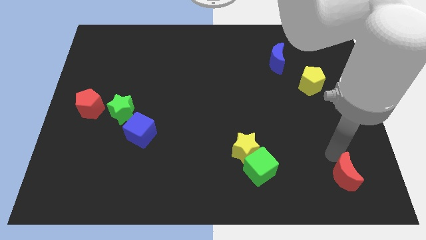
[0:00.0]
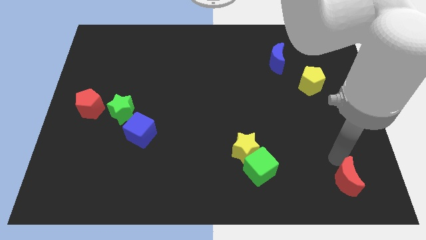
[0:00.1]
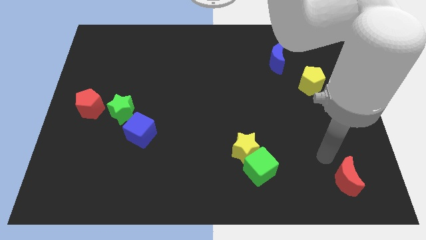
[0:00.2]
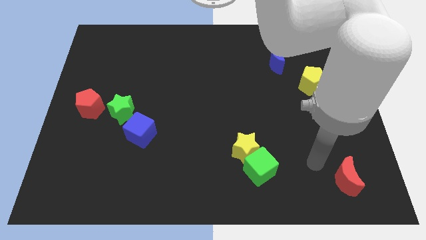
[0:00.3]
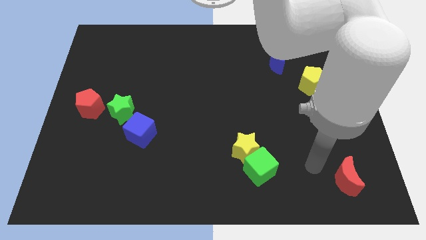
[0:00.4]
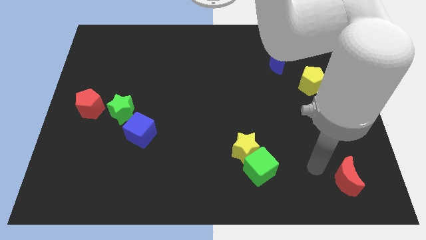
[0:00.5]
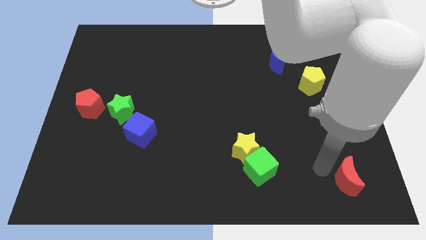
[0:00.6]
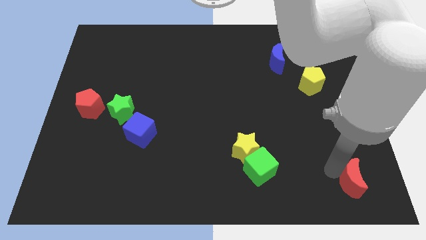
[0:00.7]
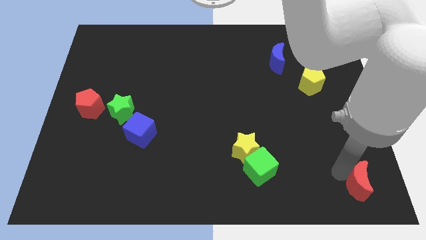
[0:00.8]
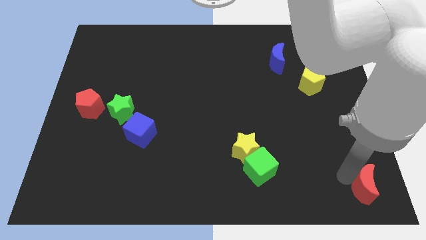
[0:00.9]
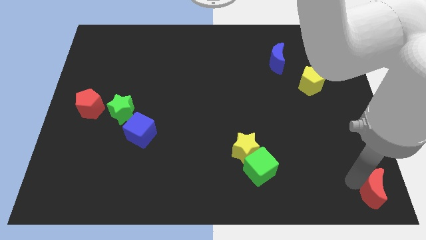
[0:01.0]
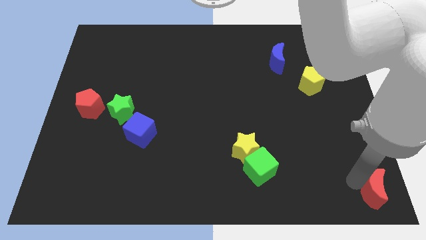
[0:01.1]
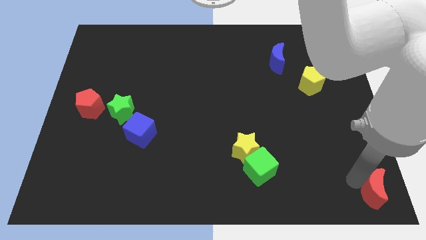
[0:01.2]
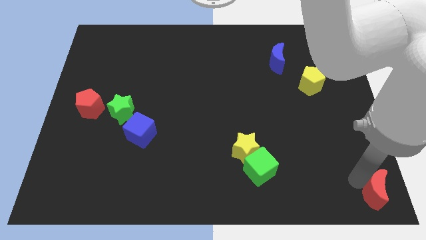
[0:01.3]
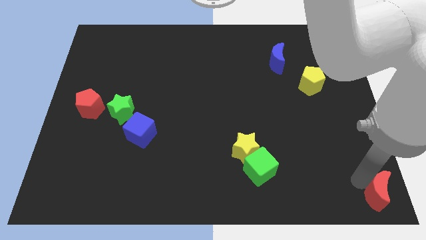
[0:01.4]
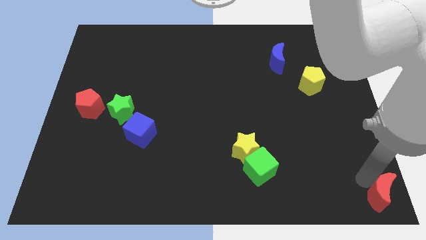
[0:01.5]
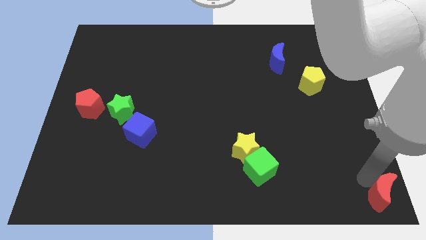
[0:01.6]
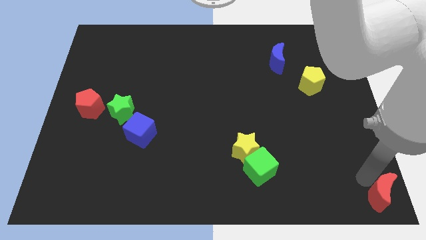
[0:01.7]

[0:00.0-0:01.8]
place red crescent towards bottom right corner

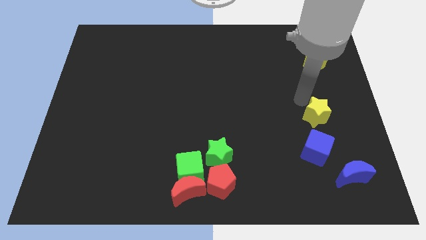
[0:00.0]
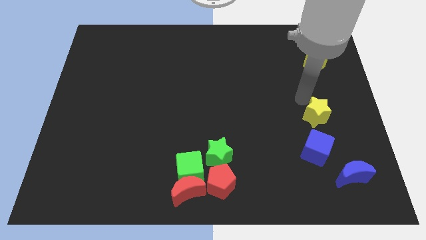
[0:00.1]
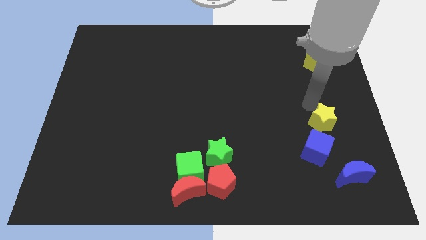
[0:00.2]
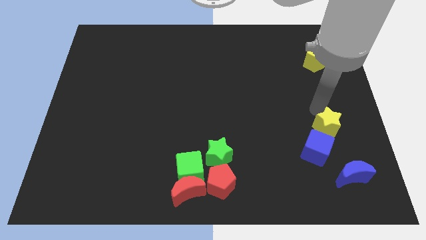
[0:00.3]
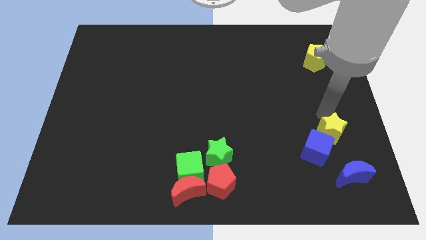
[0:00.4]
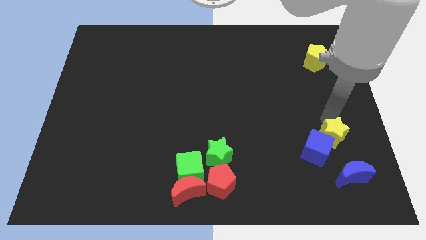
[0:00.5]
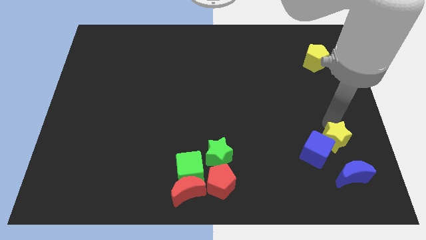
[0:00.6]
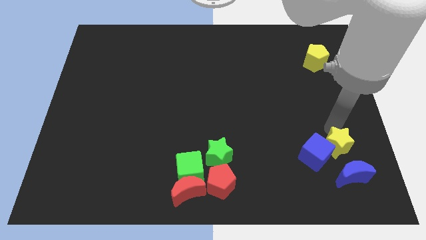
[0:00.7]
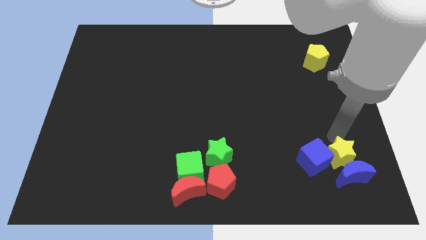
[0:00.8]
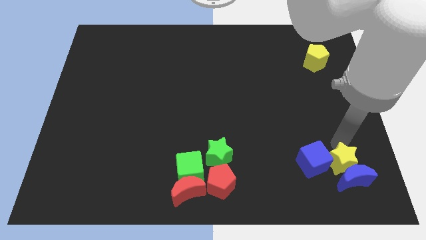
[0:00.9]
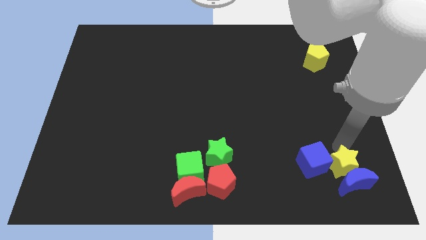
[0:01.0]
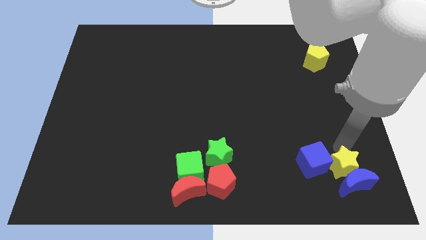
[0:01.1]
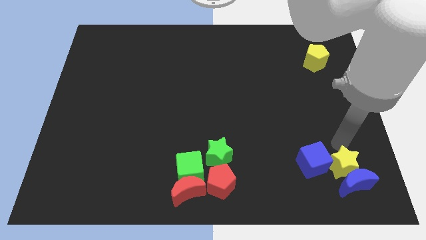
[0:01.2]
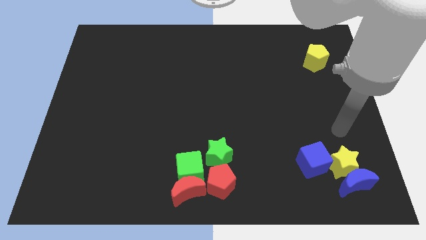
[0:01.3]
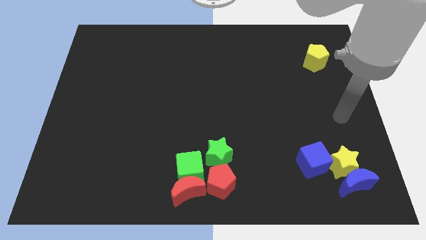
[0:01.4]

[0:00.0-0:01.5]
push the yellow star into the blue cube and blue crescent

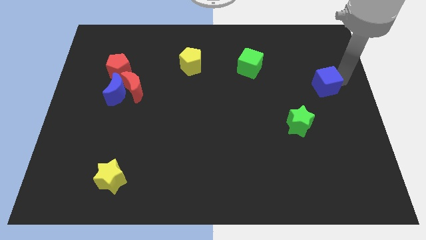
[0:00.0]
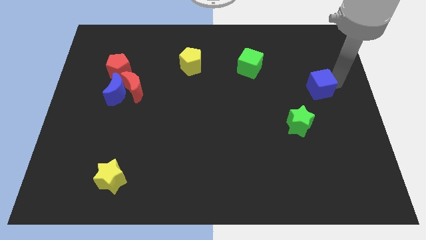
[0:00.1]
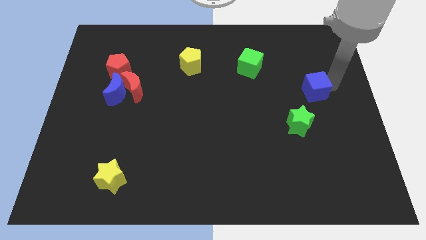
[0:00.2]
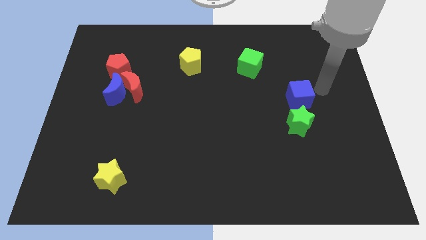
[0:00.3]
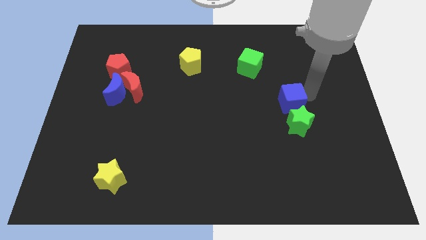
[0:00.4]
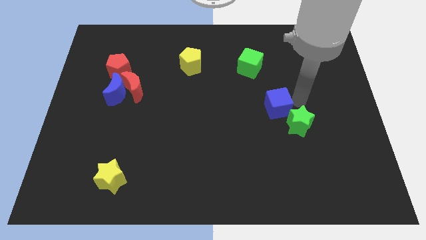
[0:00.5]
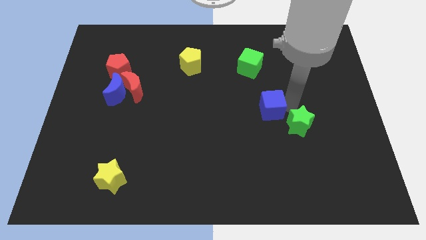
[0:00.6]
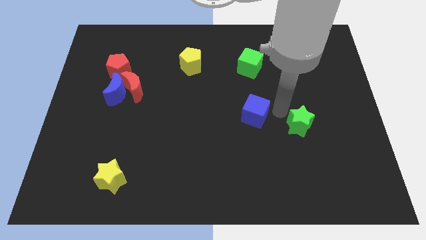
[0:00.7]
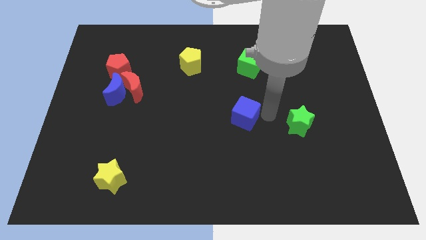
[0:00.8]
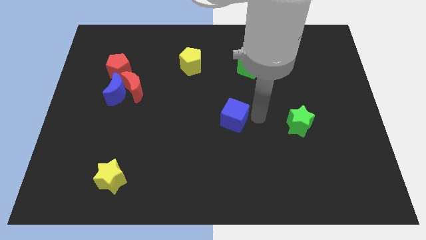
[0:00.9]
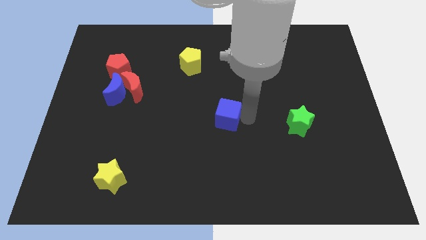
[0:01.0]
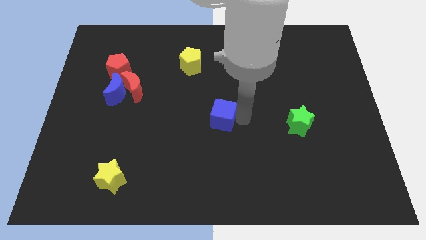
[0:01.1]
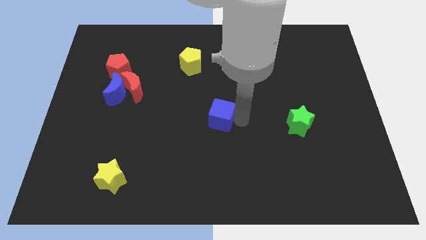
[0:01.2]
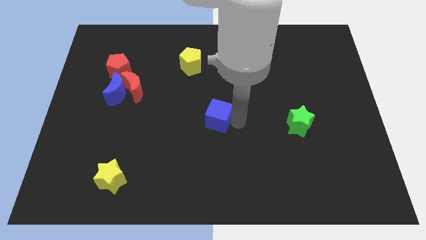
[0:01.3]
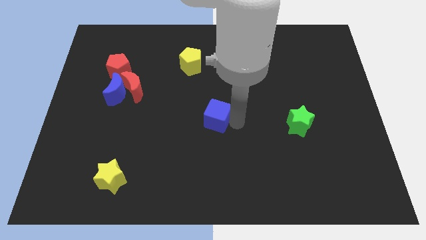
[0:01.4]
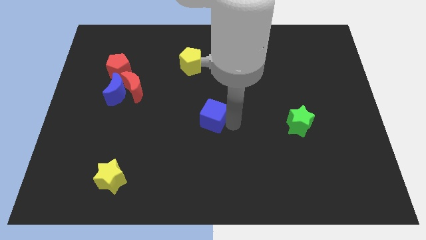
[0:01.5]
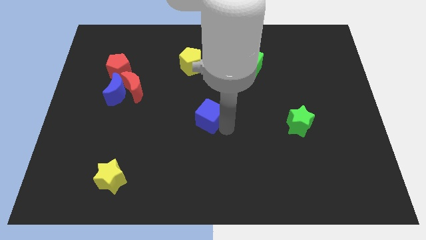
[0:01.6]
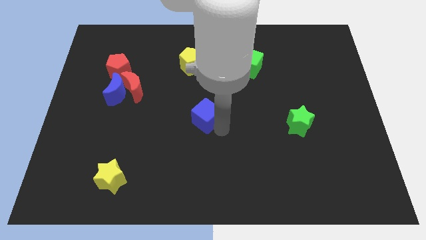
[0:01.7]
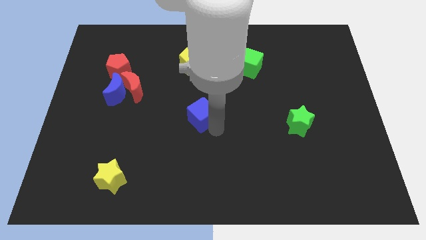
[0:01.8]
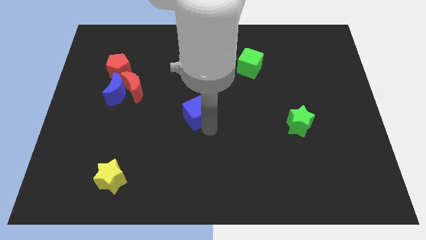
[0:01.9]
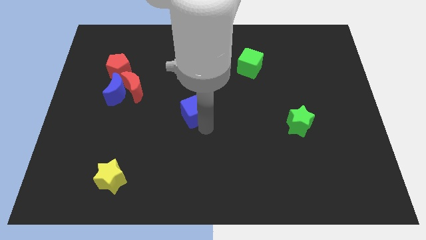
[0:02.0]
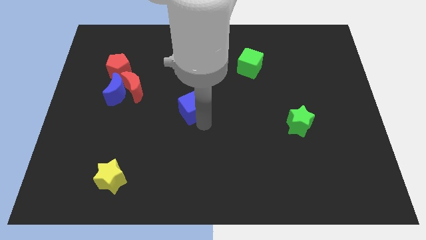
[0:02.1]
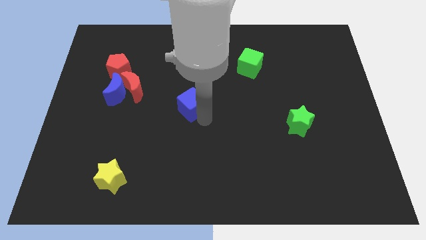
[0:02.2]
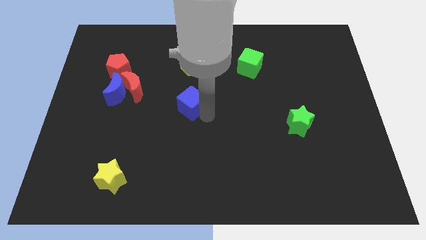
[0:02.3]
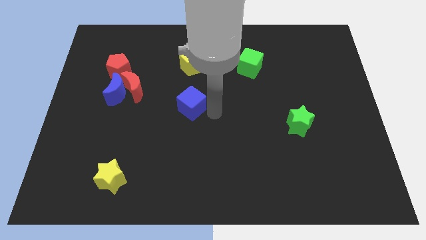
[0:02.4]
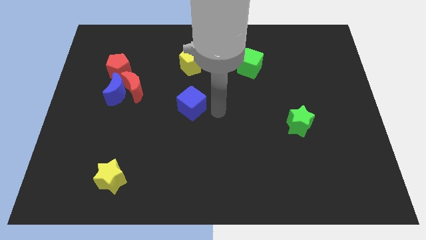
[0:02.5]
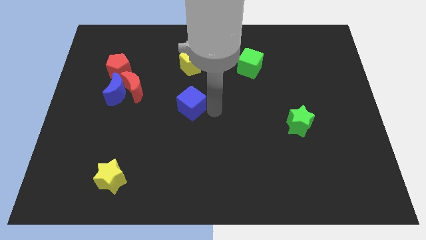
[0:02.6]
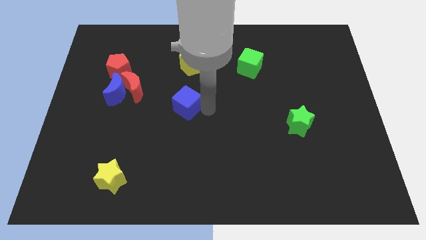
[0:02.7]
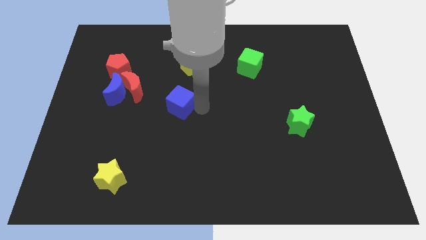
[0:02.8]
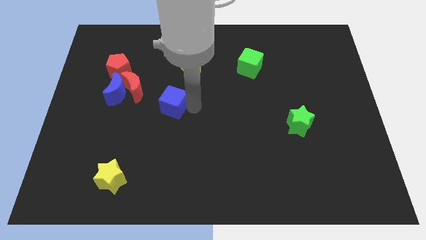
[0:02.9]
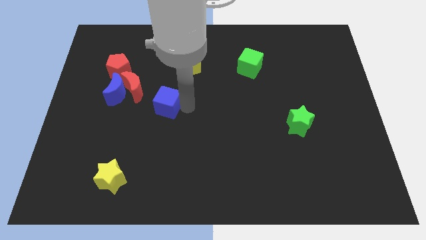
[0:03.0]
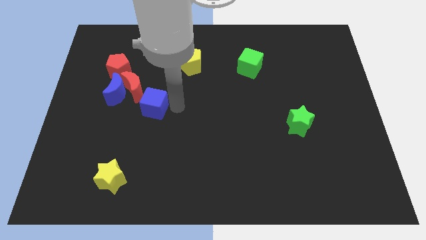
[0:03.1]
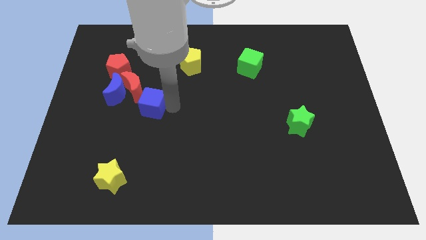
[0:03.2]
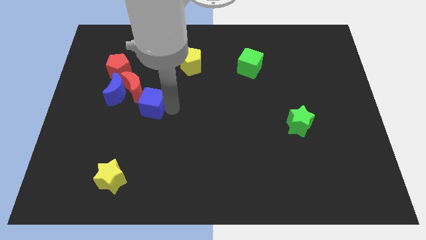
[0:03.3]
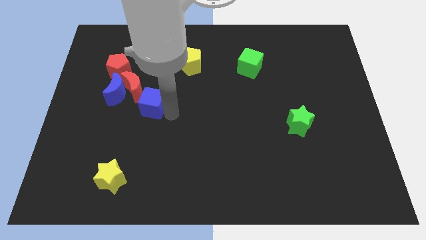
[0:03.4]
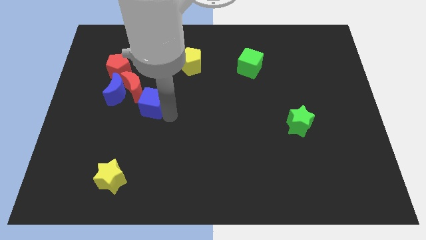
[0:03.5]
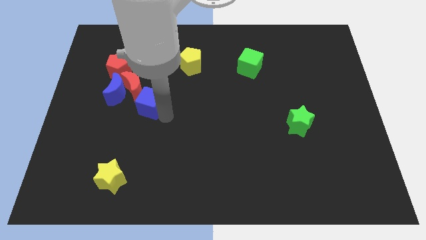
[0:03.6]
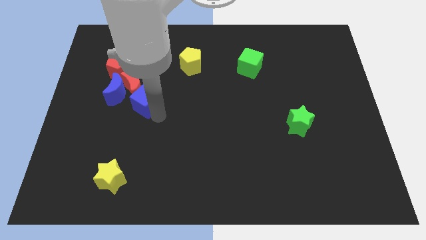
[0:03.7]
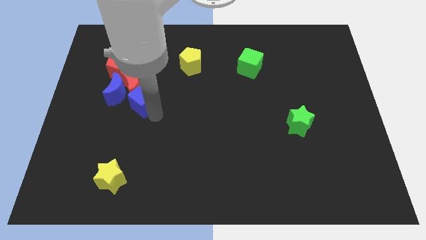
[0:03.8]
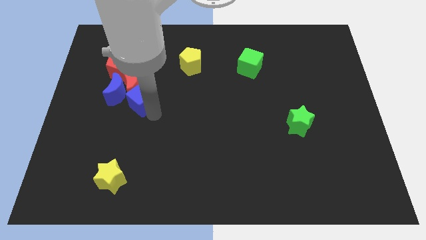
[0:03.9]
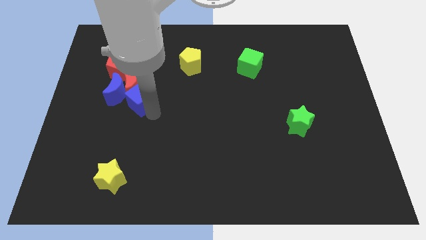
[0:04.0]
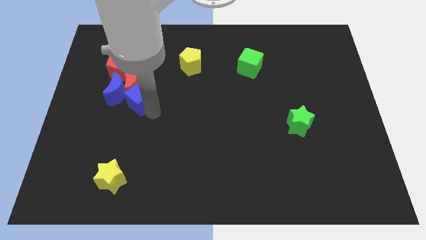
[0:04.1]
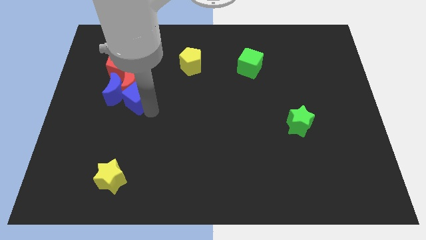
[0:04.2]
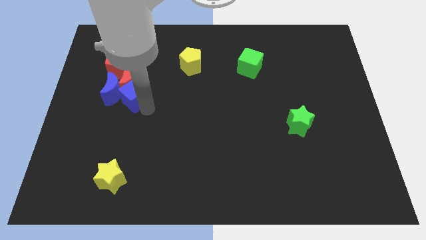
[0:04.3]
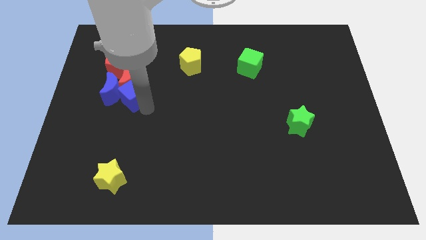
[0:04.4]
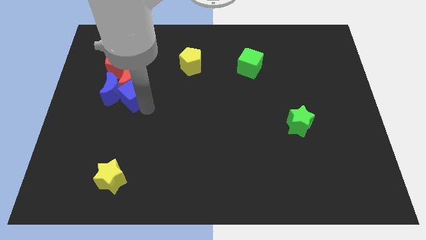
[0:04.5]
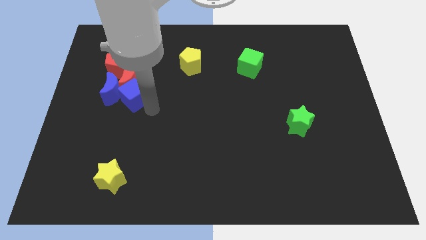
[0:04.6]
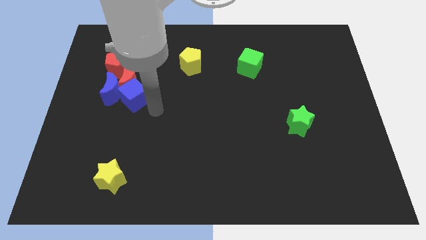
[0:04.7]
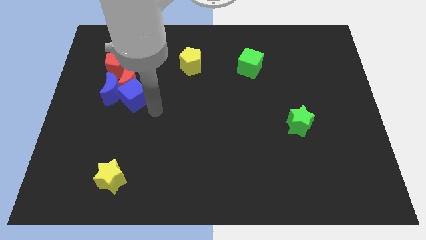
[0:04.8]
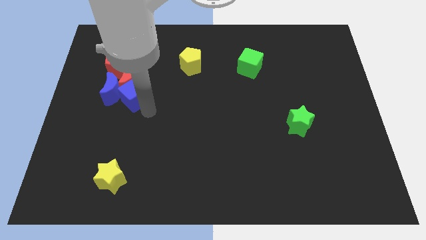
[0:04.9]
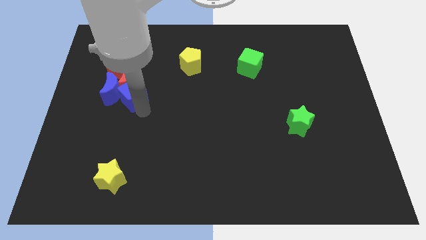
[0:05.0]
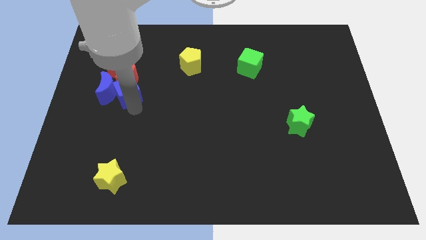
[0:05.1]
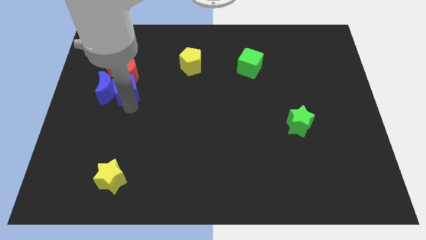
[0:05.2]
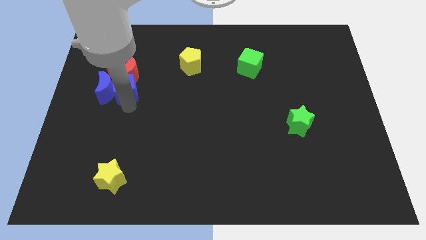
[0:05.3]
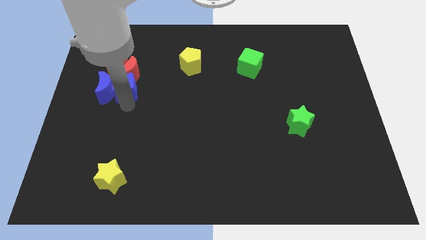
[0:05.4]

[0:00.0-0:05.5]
push the blue cube into the group of blocks

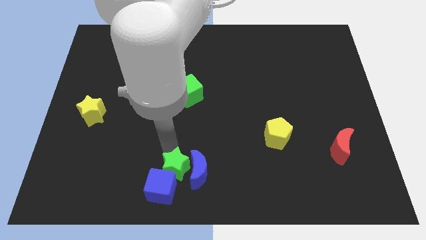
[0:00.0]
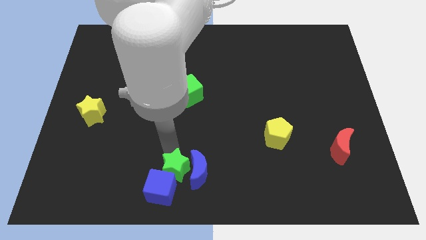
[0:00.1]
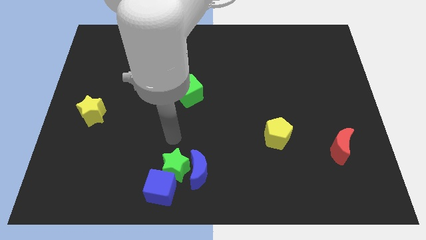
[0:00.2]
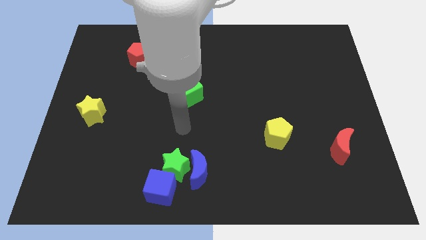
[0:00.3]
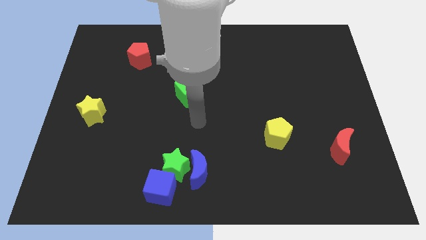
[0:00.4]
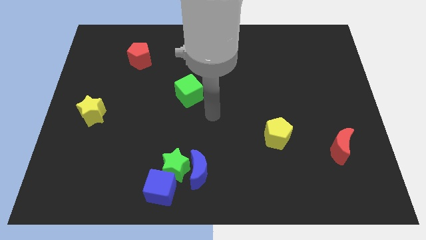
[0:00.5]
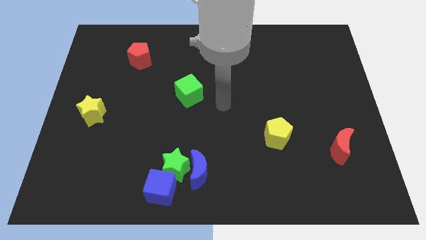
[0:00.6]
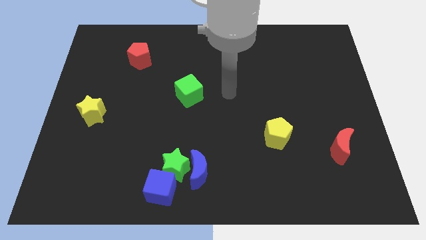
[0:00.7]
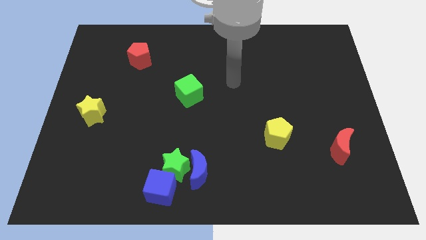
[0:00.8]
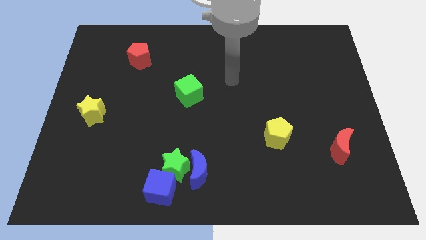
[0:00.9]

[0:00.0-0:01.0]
push the green star into the blue cube
